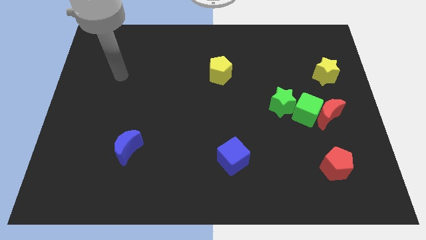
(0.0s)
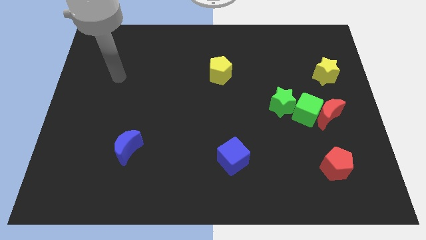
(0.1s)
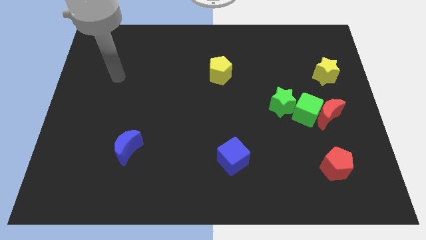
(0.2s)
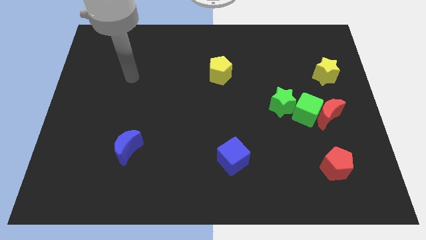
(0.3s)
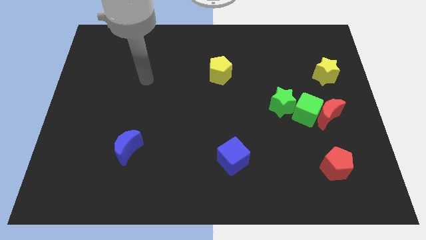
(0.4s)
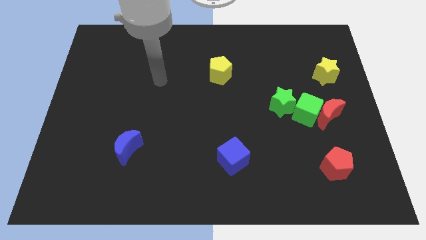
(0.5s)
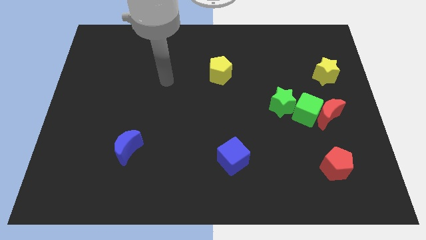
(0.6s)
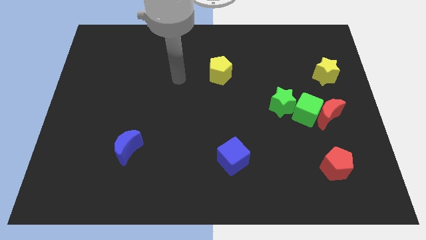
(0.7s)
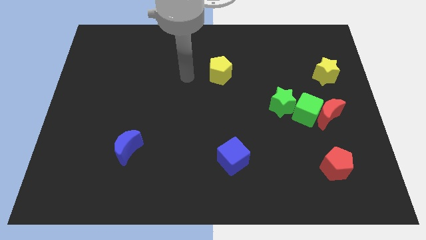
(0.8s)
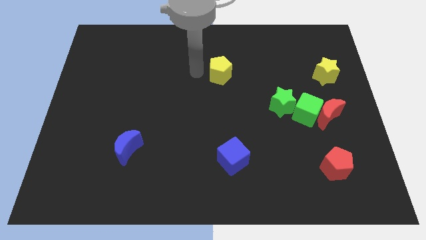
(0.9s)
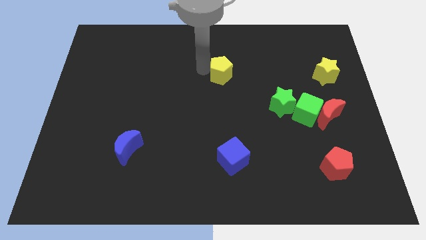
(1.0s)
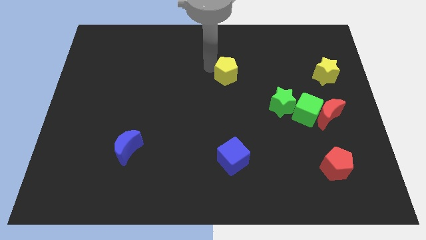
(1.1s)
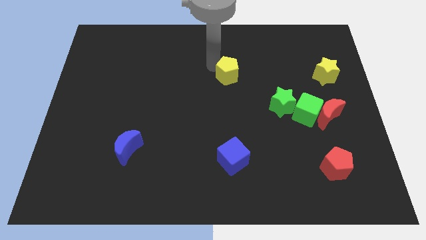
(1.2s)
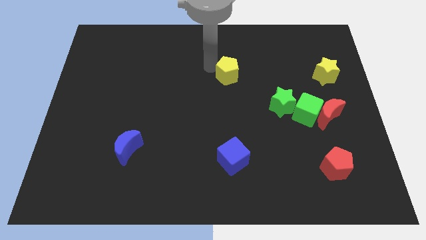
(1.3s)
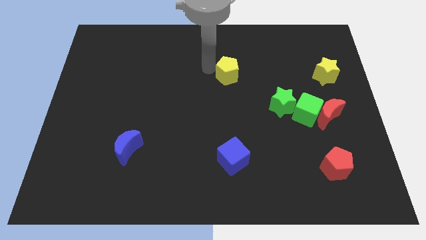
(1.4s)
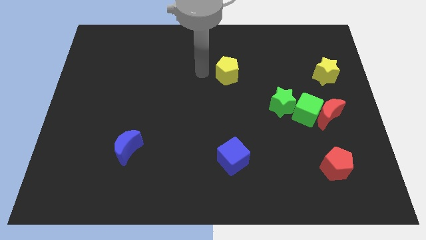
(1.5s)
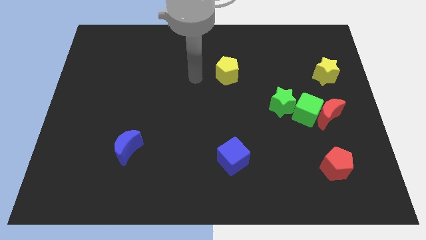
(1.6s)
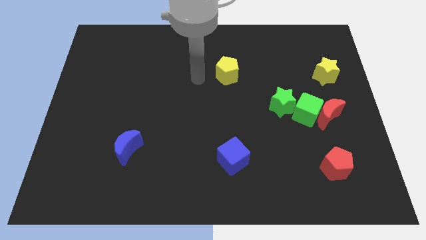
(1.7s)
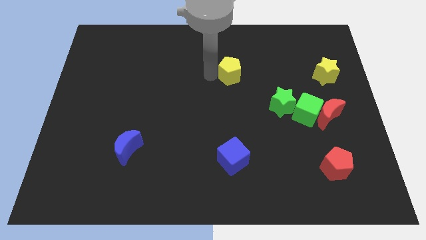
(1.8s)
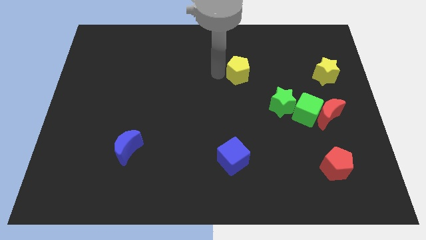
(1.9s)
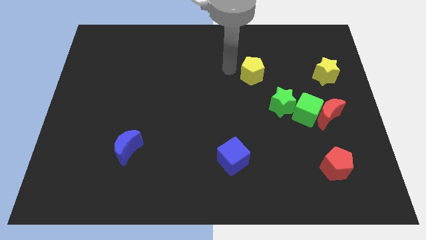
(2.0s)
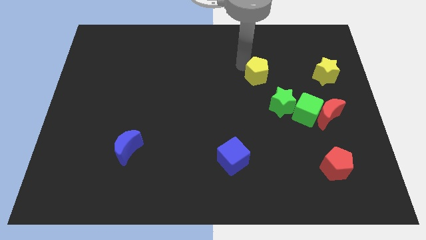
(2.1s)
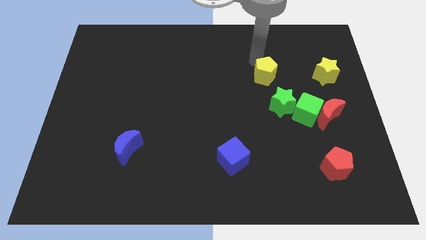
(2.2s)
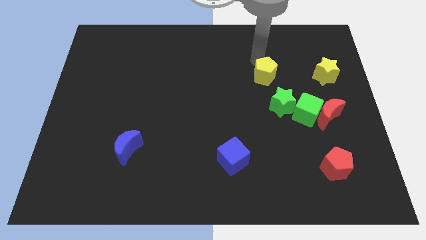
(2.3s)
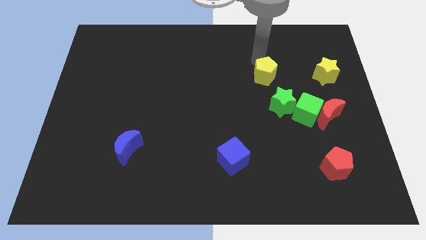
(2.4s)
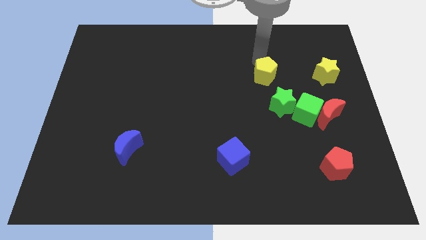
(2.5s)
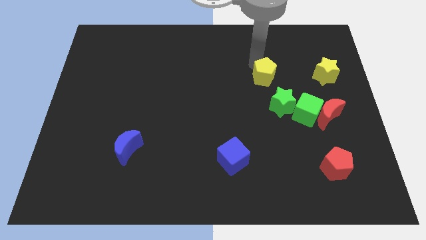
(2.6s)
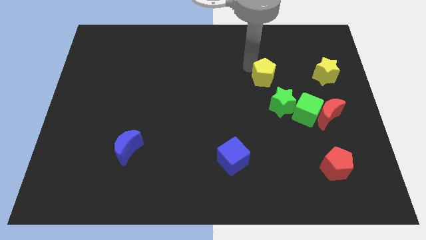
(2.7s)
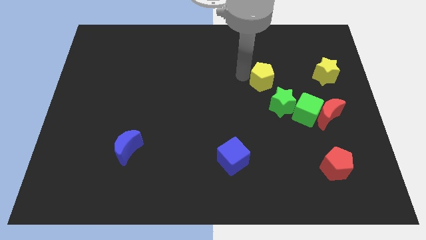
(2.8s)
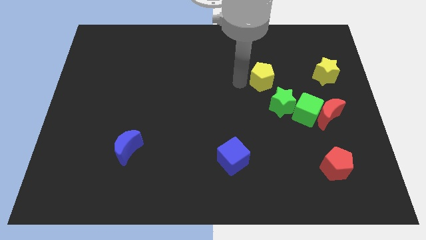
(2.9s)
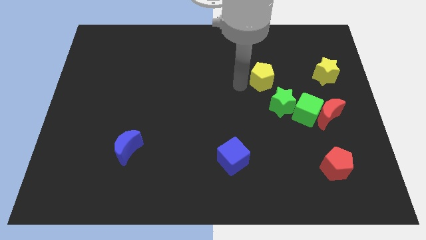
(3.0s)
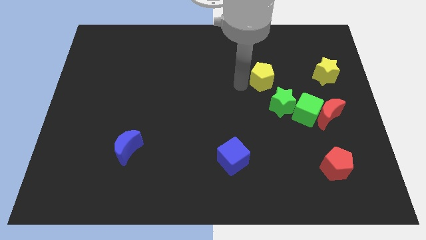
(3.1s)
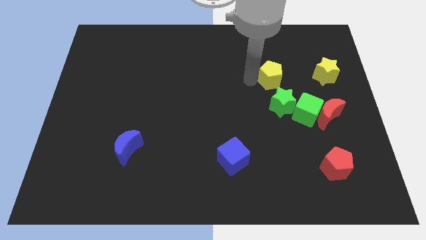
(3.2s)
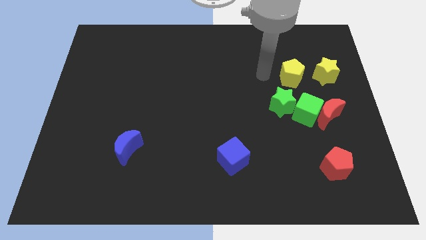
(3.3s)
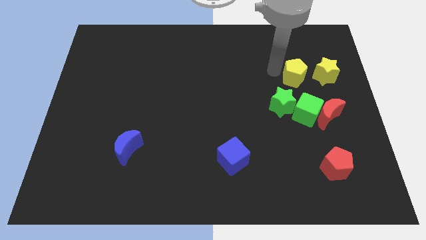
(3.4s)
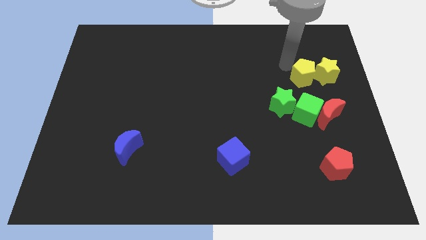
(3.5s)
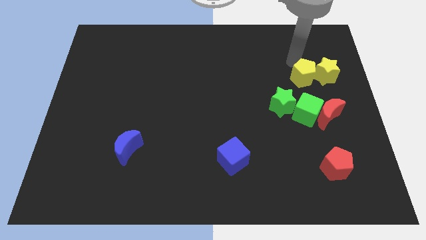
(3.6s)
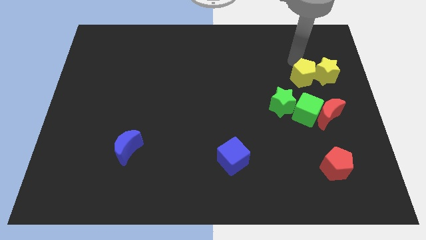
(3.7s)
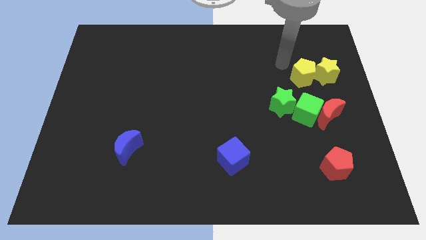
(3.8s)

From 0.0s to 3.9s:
push yellow pentagon towards yellow star

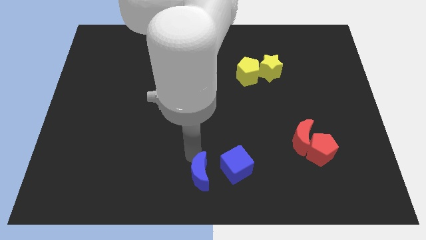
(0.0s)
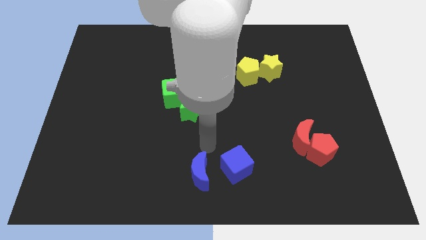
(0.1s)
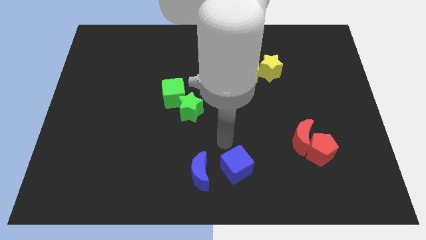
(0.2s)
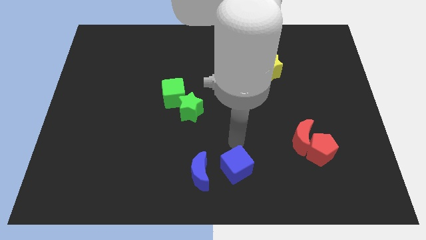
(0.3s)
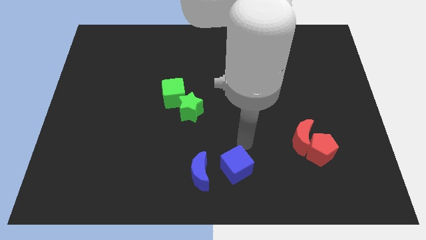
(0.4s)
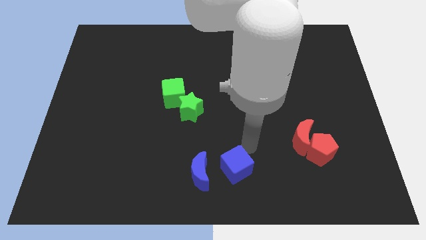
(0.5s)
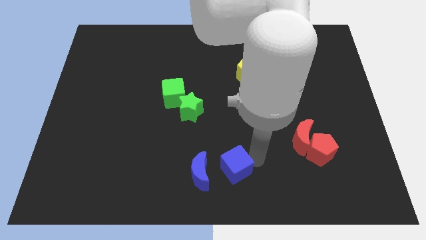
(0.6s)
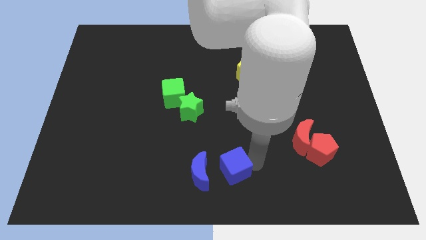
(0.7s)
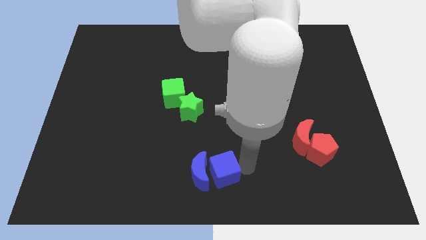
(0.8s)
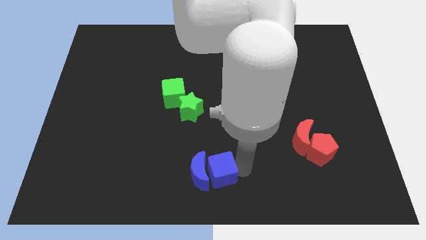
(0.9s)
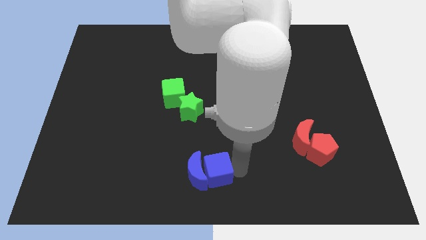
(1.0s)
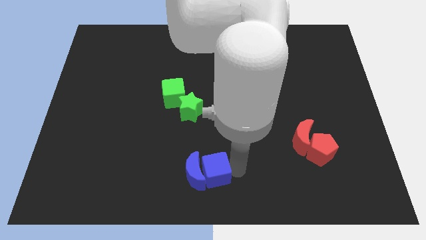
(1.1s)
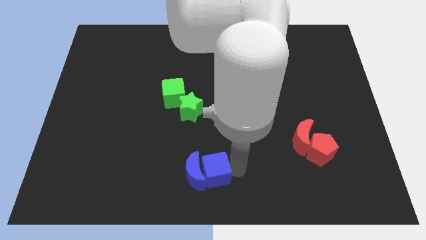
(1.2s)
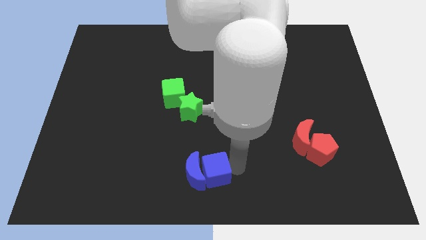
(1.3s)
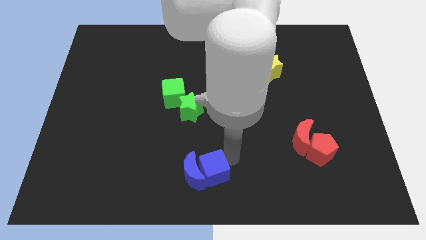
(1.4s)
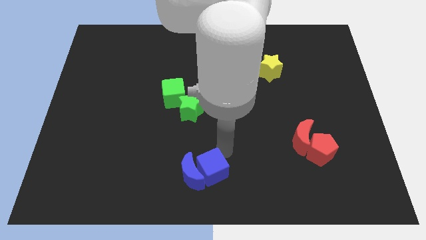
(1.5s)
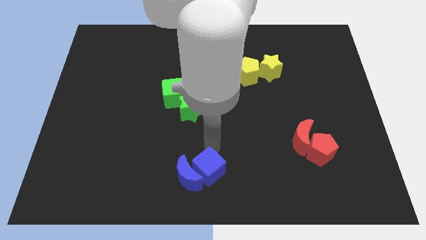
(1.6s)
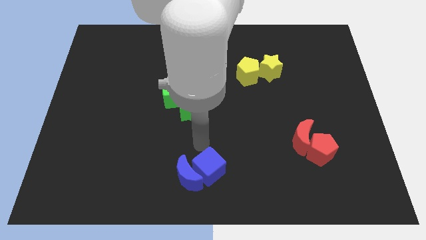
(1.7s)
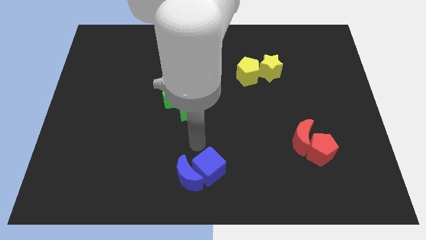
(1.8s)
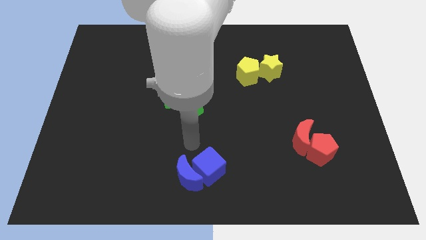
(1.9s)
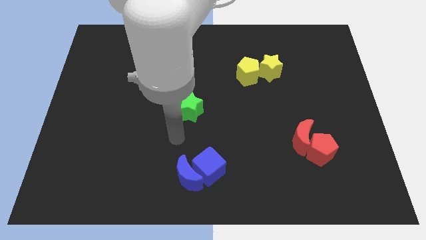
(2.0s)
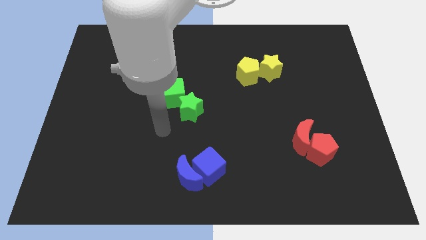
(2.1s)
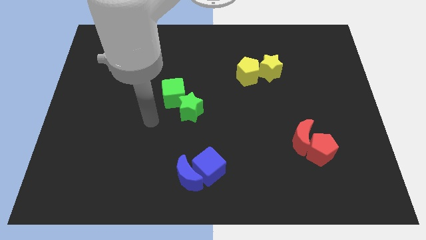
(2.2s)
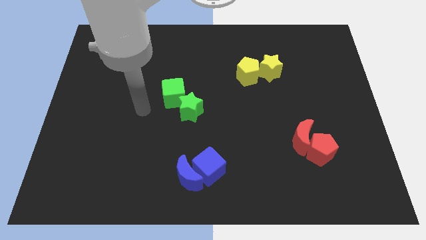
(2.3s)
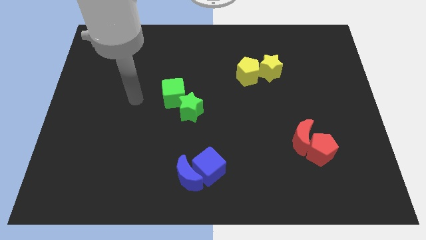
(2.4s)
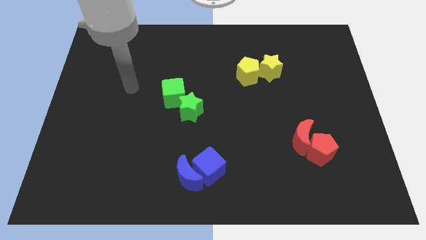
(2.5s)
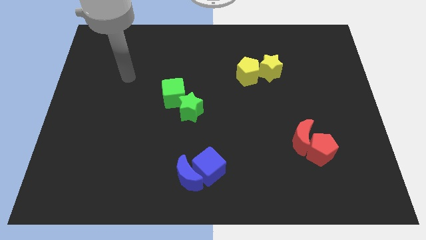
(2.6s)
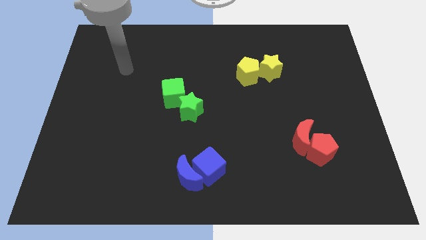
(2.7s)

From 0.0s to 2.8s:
push the blue cube into the blue crescent

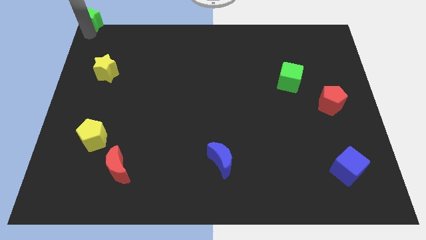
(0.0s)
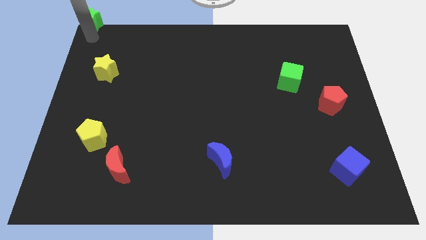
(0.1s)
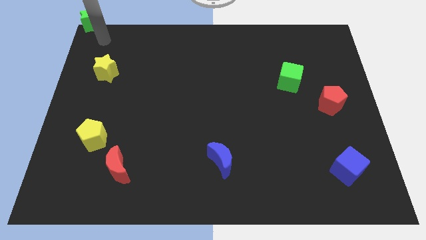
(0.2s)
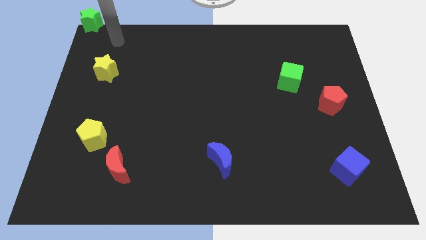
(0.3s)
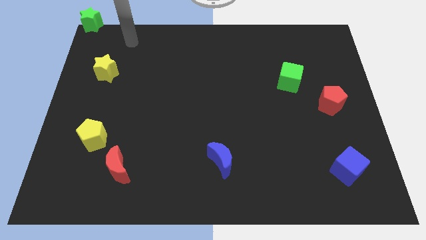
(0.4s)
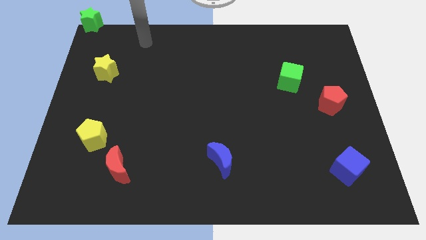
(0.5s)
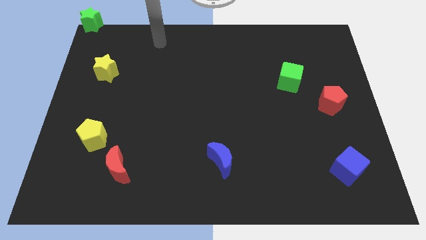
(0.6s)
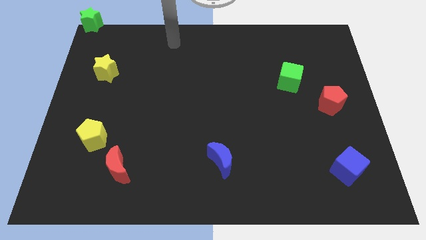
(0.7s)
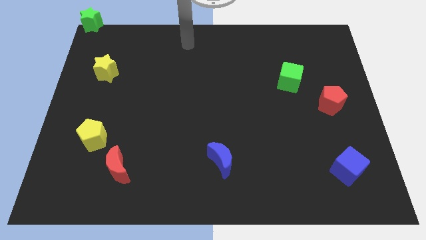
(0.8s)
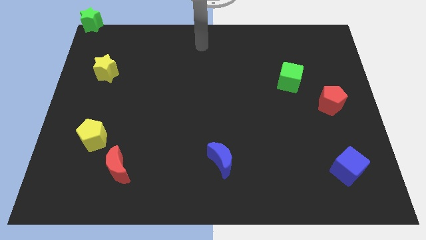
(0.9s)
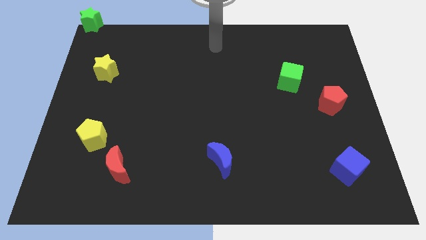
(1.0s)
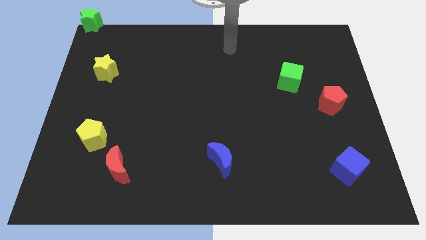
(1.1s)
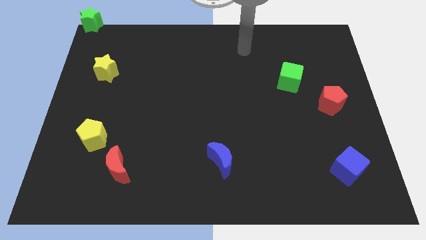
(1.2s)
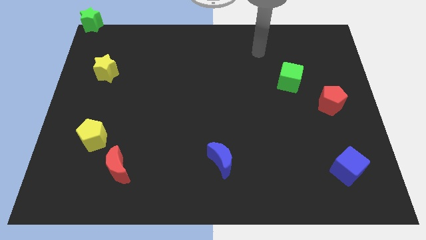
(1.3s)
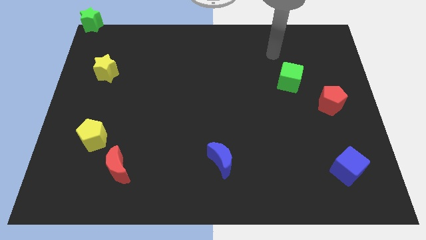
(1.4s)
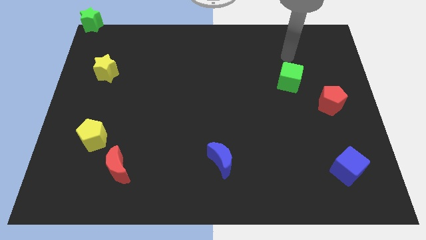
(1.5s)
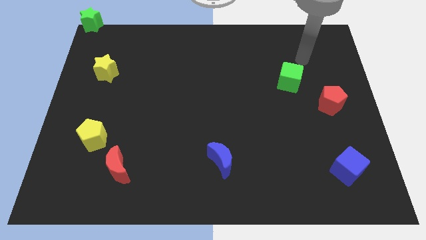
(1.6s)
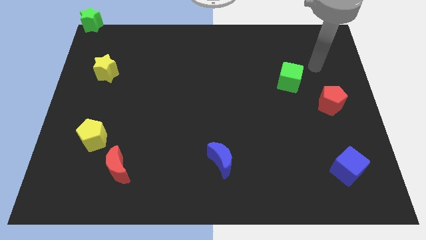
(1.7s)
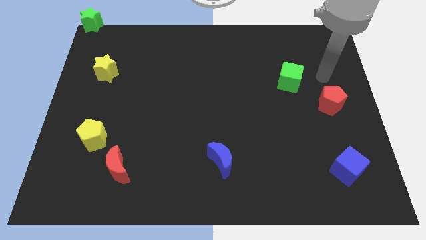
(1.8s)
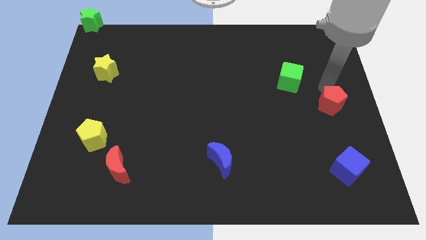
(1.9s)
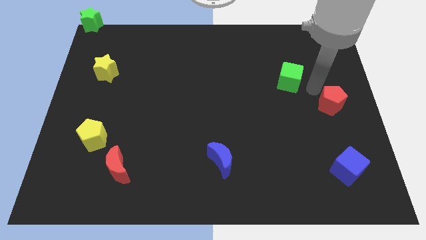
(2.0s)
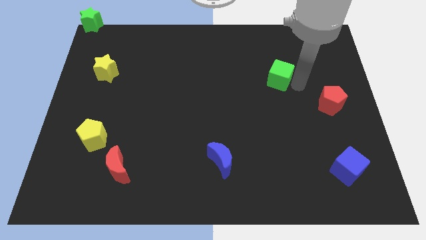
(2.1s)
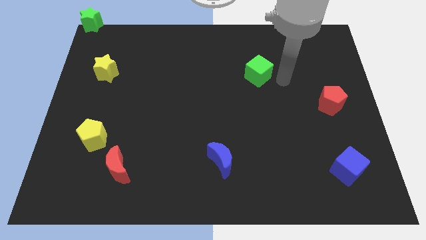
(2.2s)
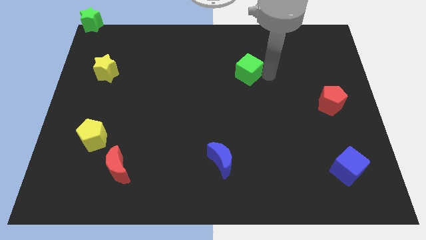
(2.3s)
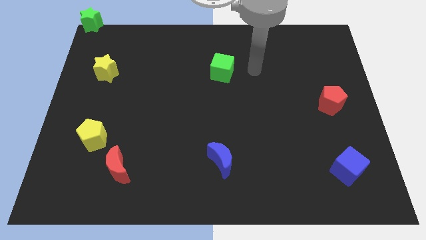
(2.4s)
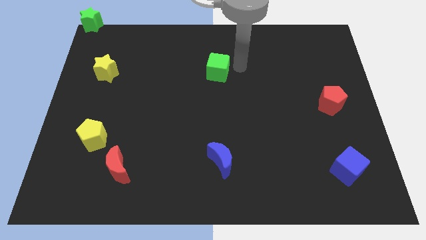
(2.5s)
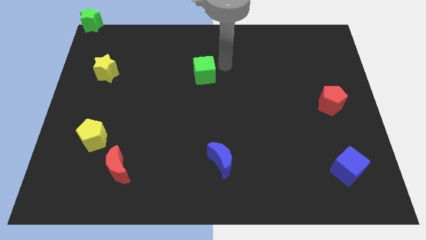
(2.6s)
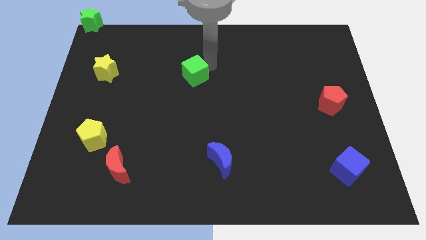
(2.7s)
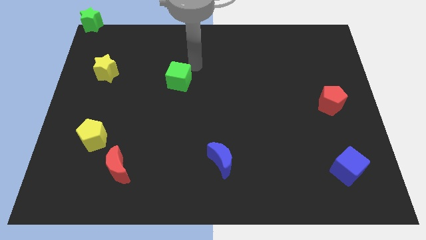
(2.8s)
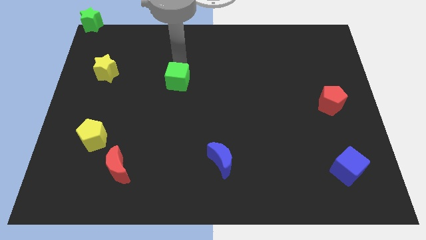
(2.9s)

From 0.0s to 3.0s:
push the green cube towards the left side of the board
